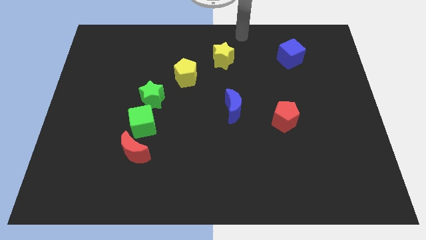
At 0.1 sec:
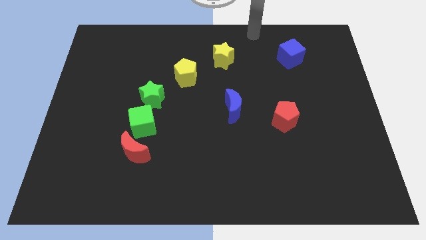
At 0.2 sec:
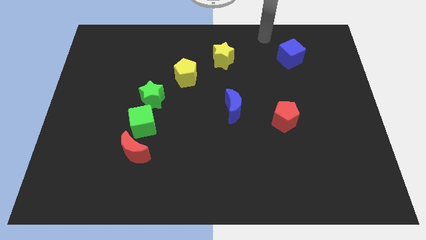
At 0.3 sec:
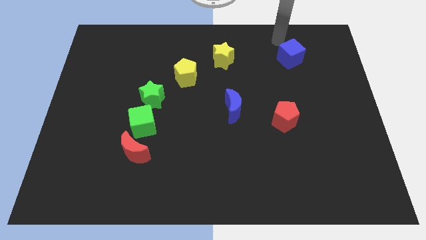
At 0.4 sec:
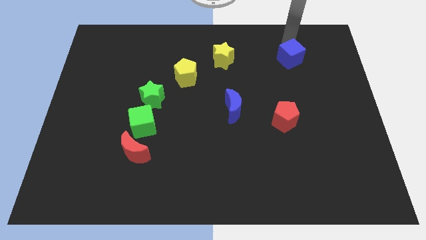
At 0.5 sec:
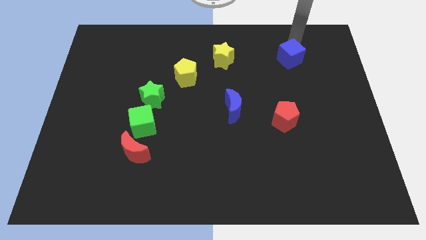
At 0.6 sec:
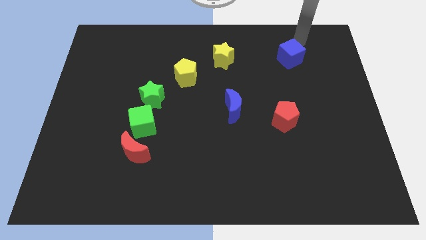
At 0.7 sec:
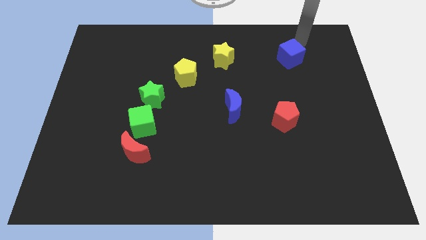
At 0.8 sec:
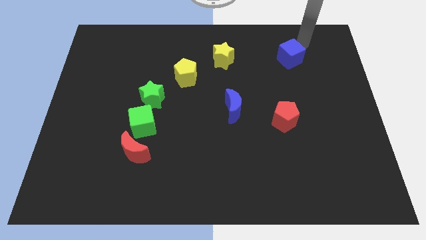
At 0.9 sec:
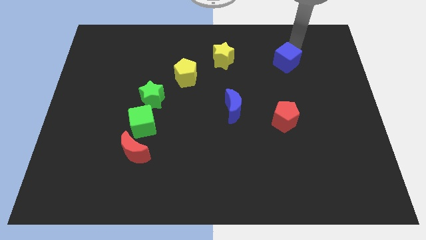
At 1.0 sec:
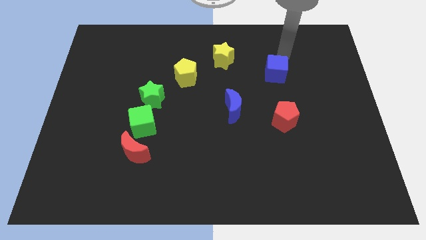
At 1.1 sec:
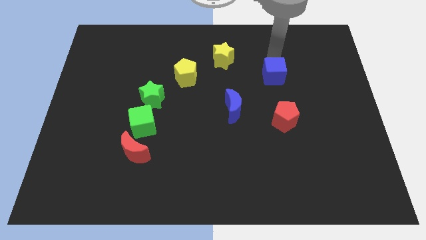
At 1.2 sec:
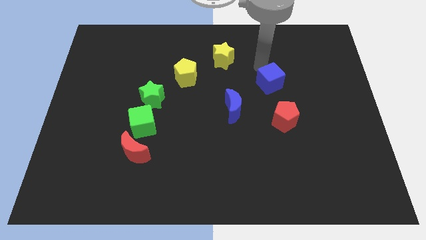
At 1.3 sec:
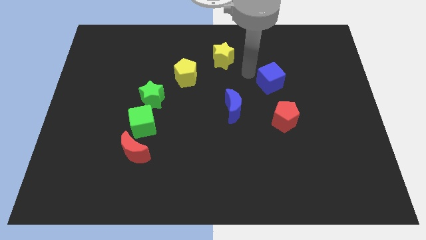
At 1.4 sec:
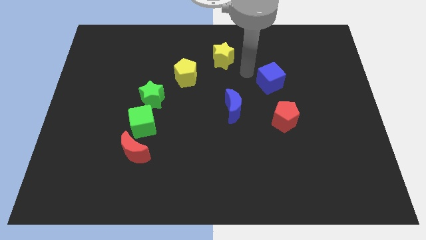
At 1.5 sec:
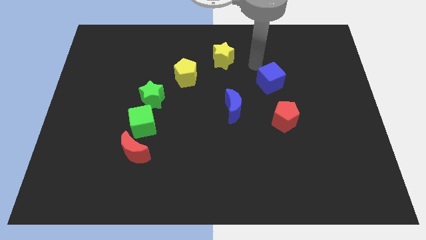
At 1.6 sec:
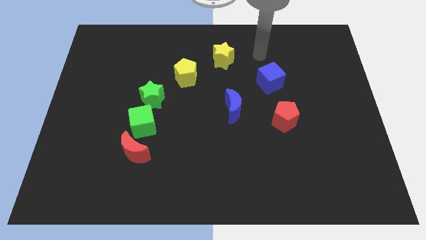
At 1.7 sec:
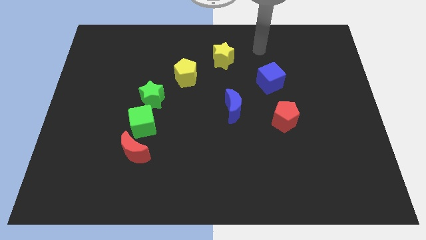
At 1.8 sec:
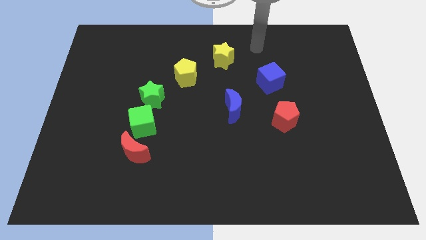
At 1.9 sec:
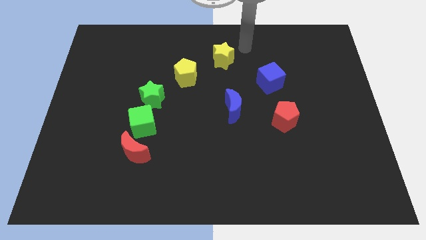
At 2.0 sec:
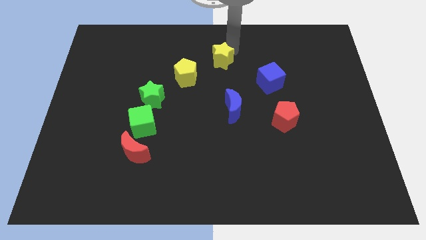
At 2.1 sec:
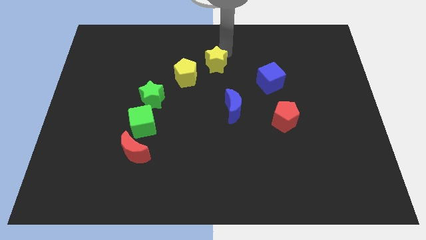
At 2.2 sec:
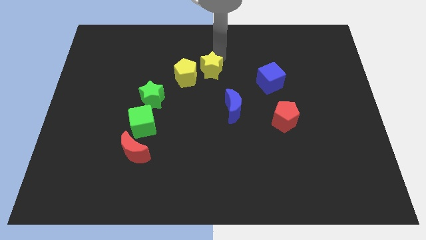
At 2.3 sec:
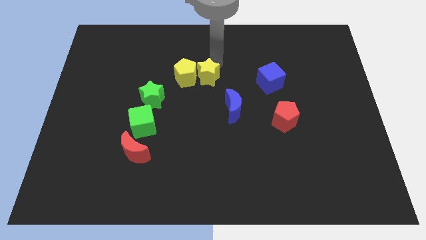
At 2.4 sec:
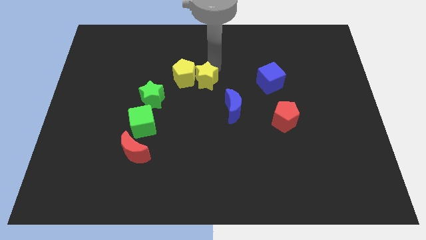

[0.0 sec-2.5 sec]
move the yellow star into the yellow pentagon

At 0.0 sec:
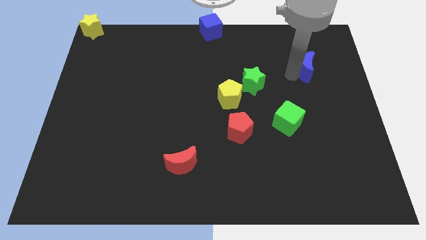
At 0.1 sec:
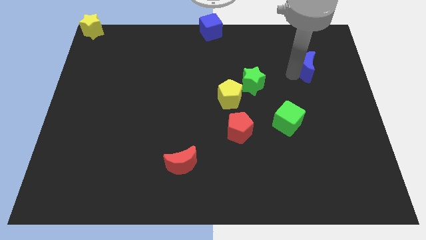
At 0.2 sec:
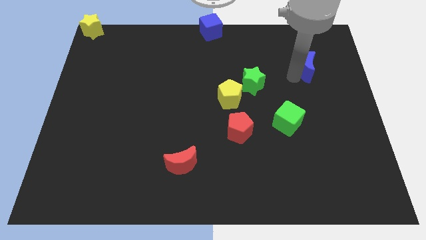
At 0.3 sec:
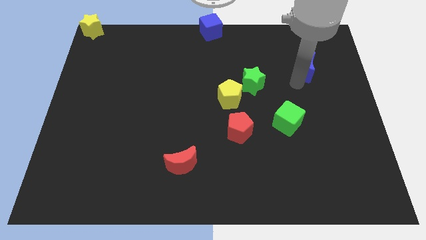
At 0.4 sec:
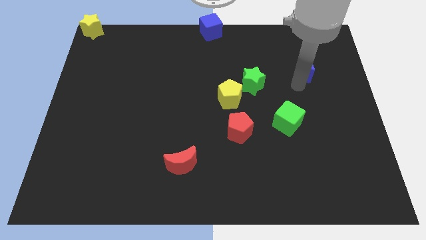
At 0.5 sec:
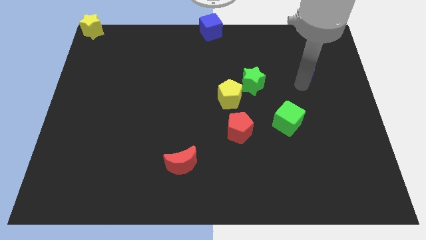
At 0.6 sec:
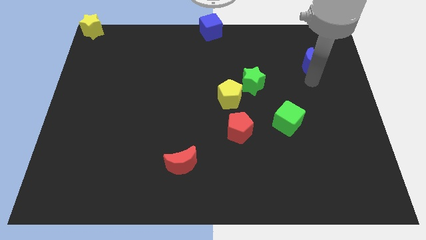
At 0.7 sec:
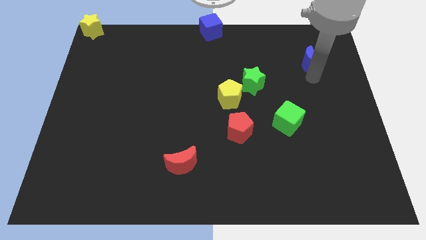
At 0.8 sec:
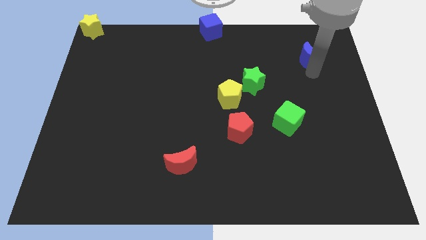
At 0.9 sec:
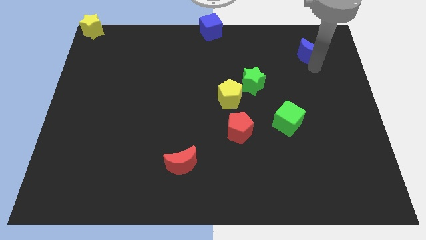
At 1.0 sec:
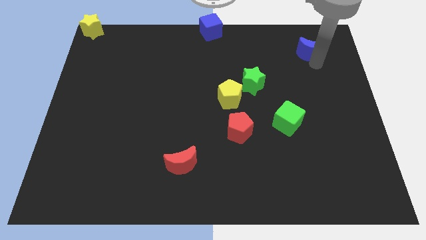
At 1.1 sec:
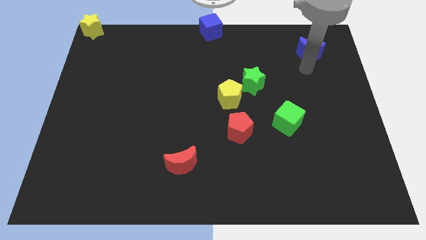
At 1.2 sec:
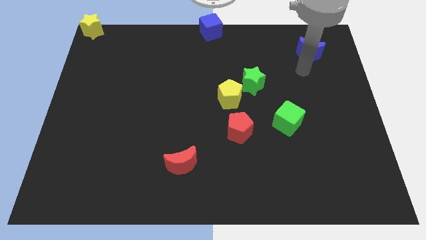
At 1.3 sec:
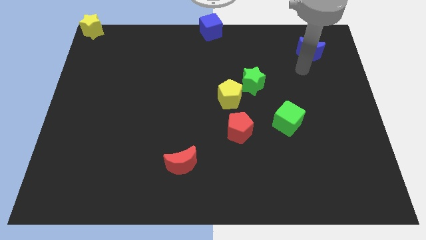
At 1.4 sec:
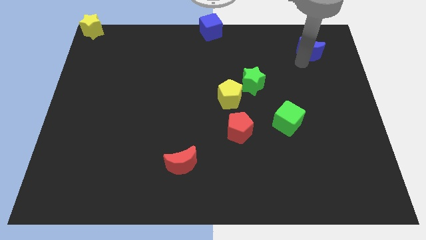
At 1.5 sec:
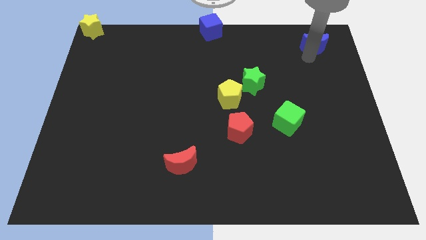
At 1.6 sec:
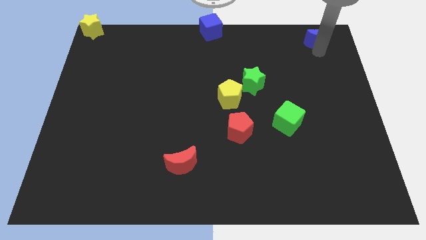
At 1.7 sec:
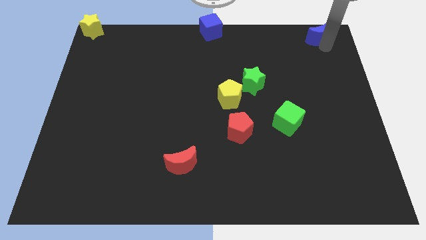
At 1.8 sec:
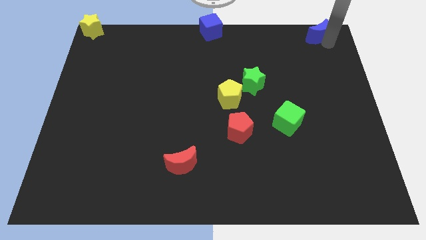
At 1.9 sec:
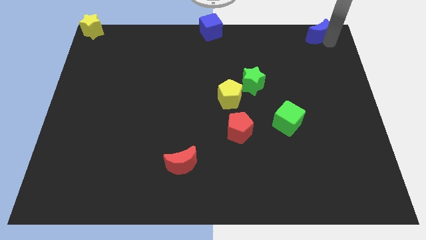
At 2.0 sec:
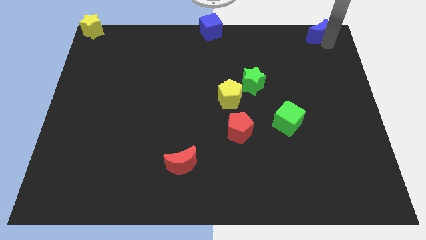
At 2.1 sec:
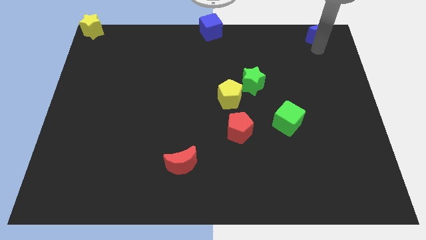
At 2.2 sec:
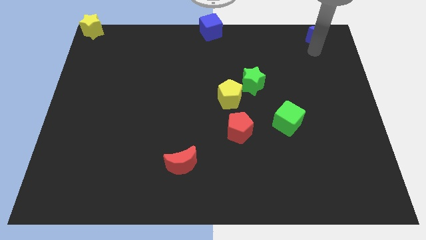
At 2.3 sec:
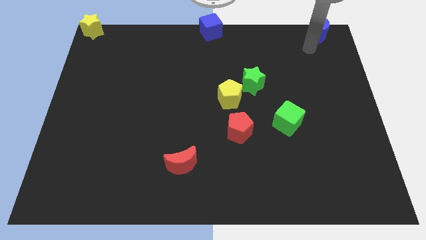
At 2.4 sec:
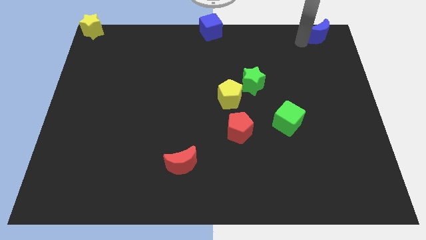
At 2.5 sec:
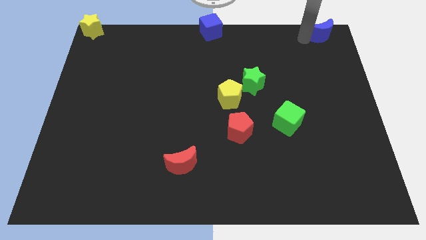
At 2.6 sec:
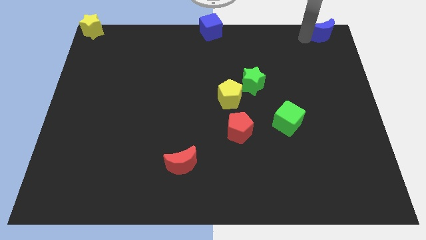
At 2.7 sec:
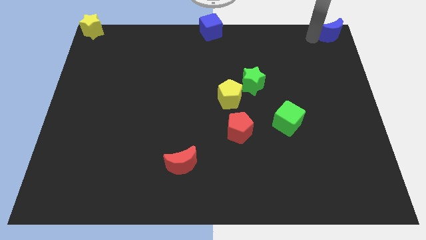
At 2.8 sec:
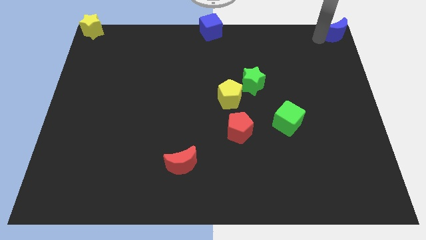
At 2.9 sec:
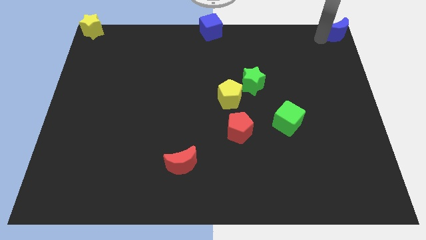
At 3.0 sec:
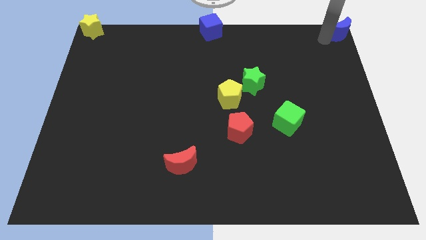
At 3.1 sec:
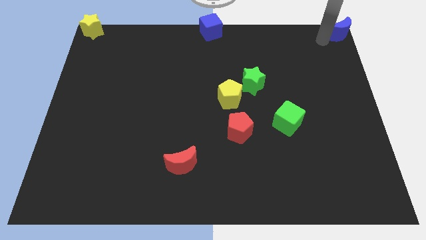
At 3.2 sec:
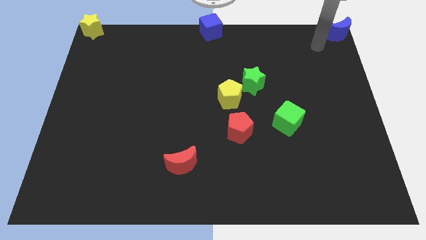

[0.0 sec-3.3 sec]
drag the blue crescent towards the top right corner of the board

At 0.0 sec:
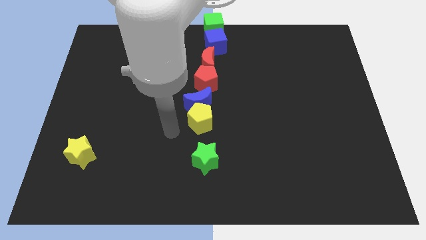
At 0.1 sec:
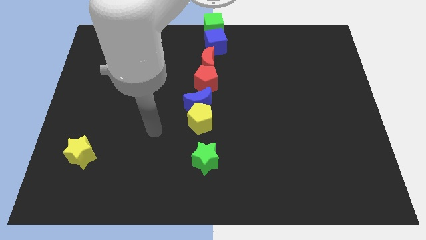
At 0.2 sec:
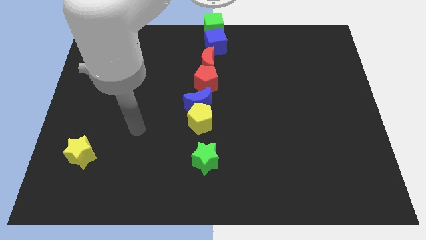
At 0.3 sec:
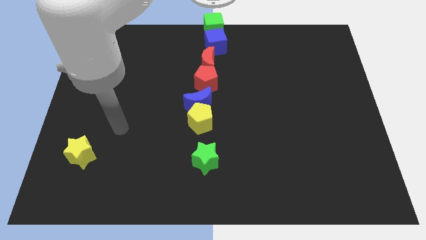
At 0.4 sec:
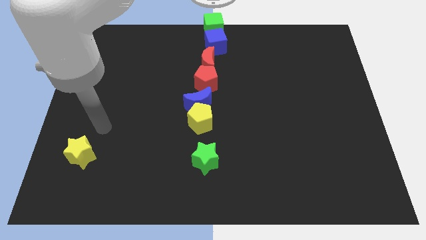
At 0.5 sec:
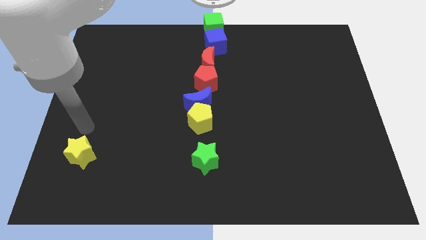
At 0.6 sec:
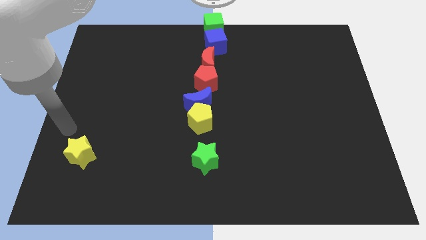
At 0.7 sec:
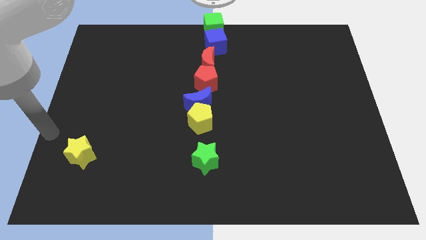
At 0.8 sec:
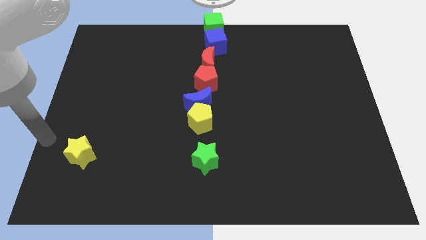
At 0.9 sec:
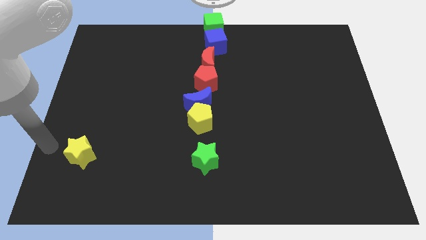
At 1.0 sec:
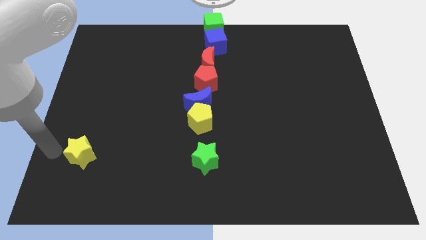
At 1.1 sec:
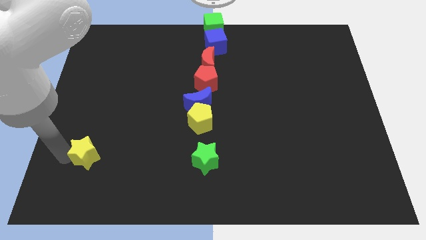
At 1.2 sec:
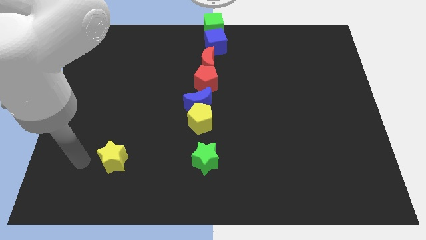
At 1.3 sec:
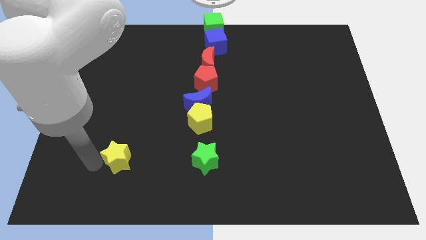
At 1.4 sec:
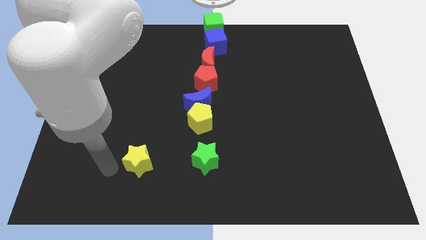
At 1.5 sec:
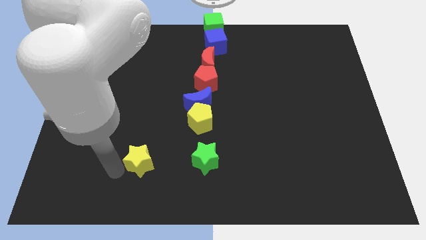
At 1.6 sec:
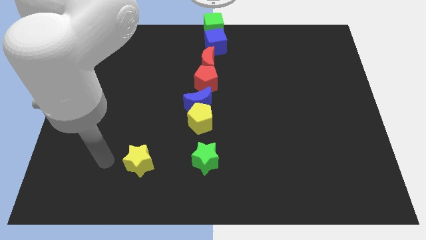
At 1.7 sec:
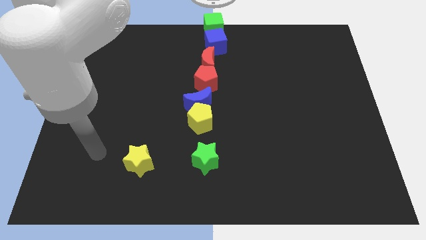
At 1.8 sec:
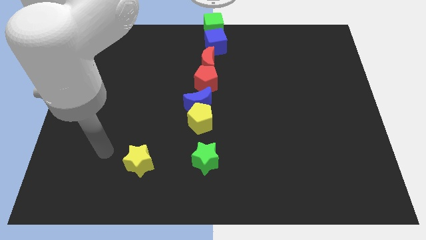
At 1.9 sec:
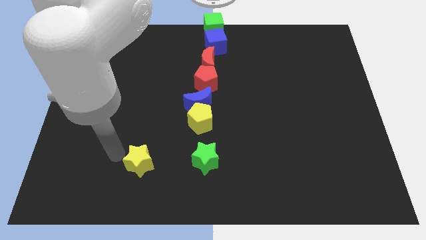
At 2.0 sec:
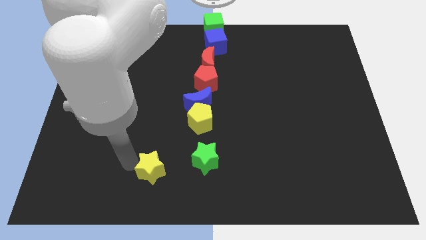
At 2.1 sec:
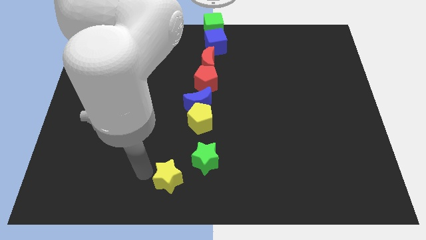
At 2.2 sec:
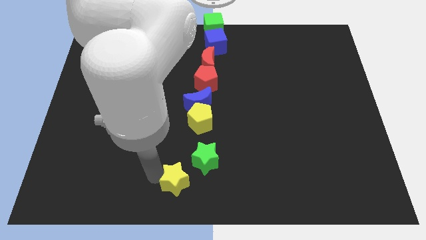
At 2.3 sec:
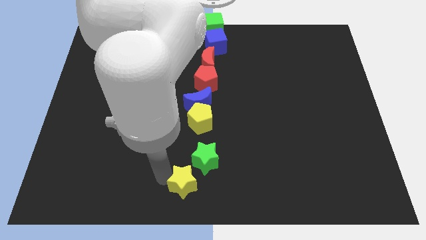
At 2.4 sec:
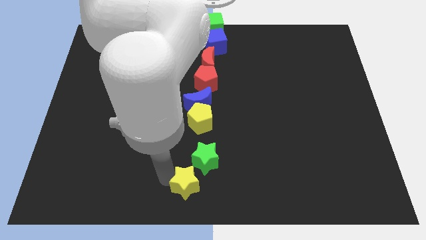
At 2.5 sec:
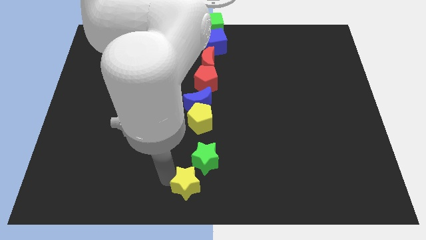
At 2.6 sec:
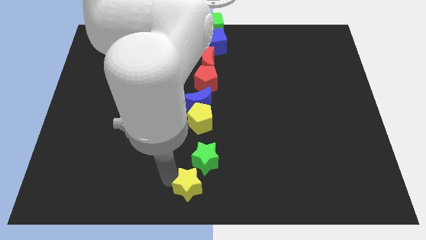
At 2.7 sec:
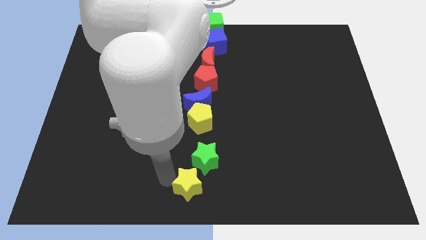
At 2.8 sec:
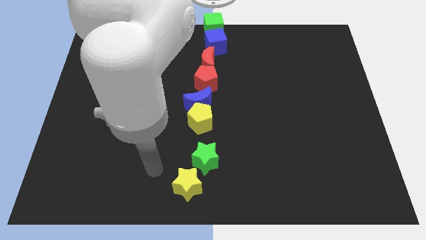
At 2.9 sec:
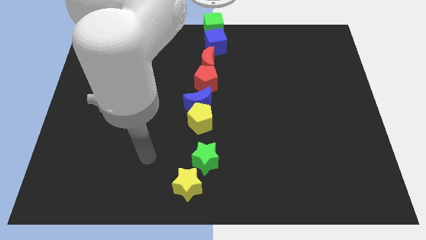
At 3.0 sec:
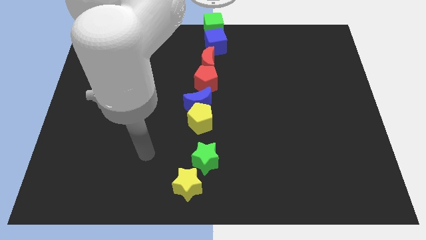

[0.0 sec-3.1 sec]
place the yellow star below green star
